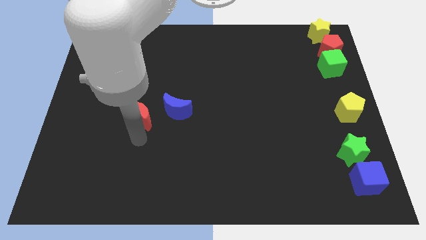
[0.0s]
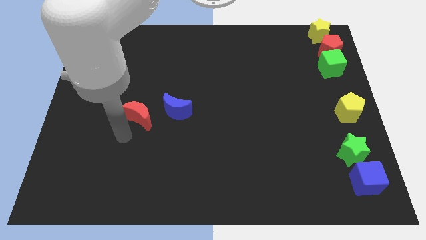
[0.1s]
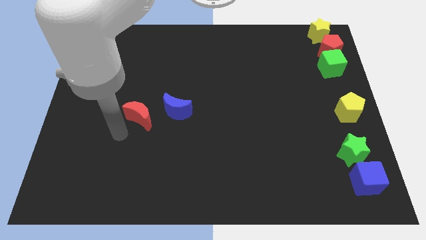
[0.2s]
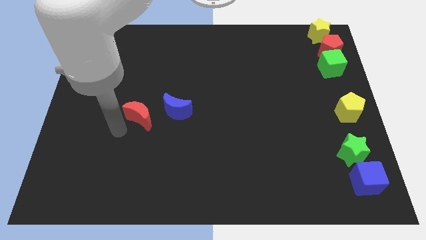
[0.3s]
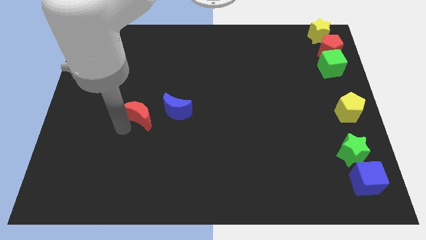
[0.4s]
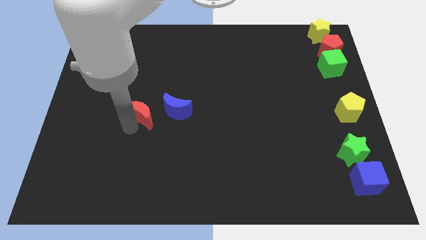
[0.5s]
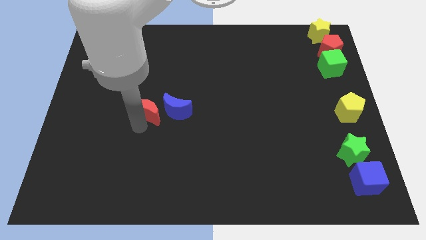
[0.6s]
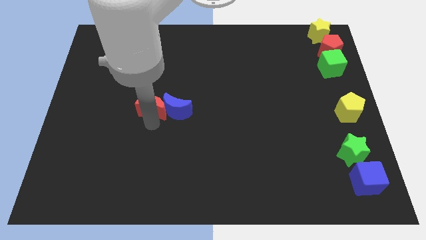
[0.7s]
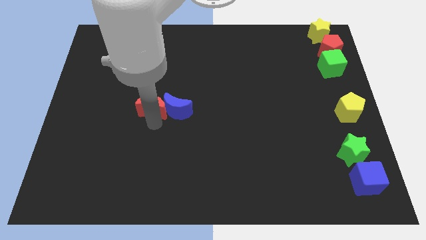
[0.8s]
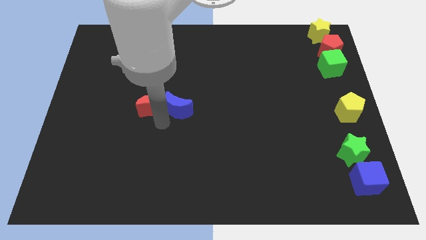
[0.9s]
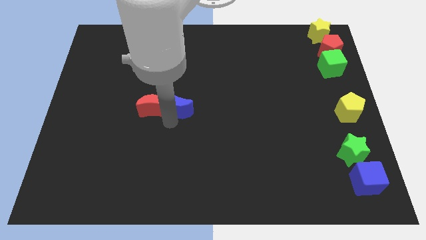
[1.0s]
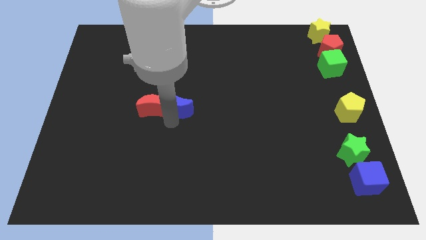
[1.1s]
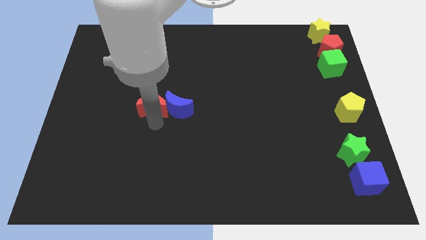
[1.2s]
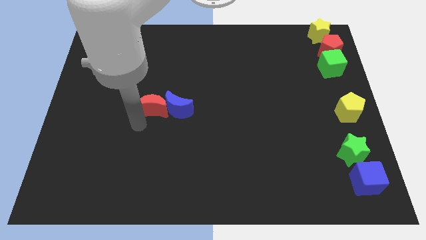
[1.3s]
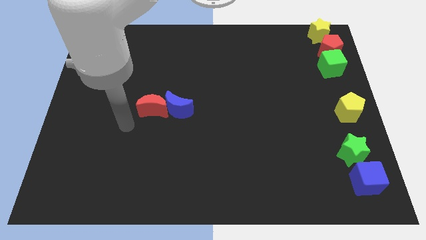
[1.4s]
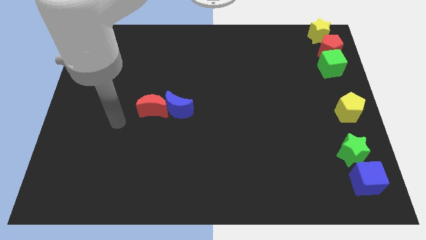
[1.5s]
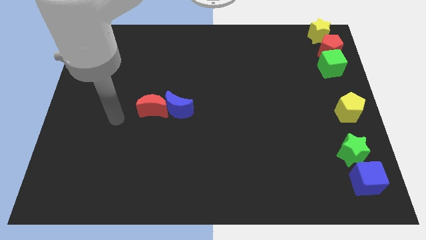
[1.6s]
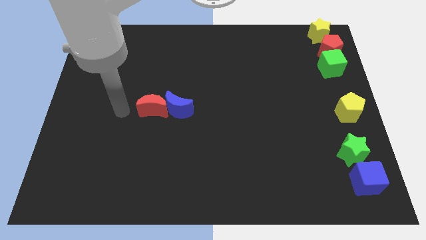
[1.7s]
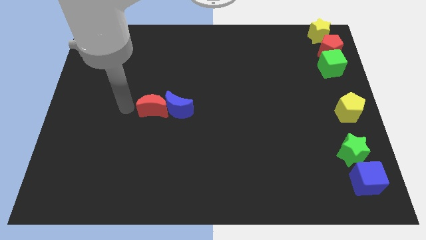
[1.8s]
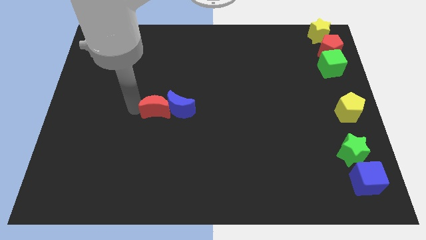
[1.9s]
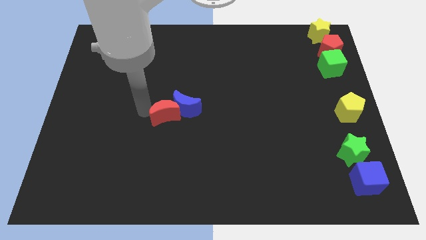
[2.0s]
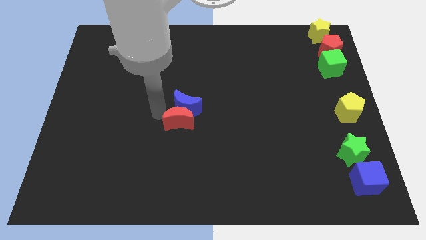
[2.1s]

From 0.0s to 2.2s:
push the red moon into the blue moon

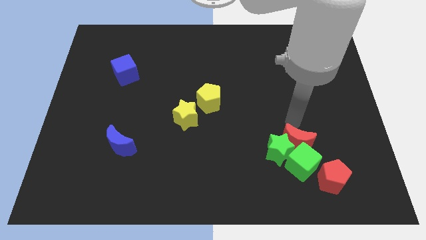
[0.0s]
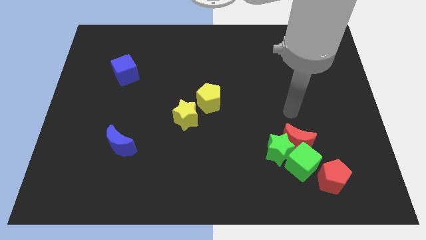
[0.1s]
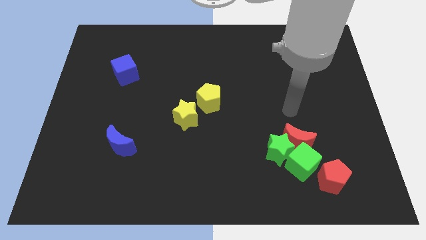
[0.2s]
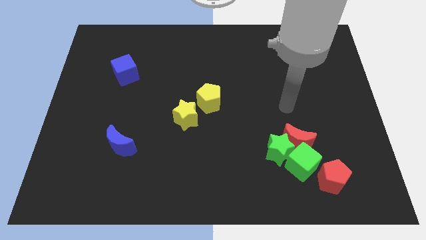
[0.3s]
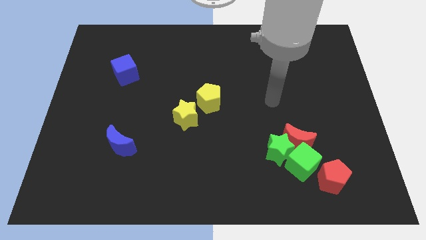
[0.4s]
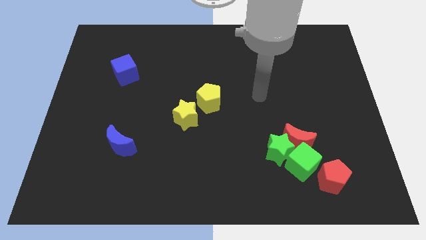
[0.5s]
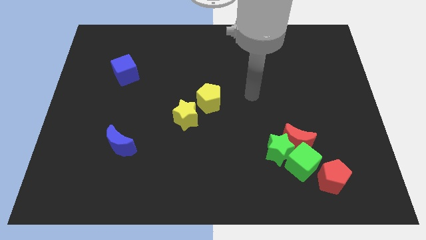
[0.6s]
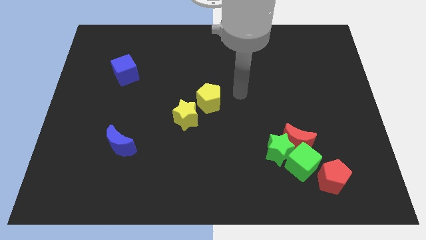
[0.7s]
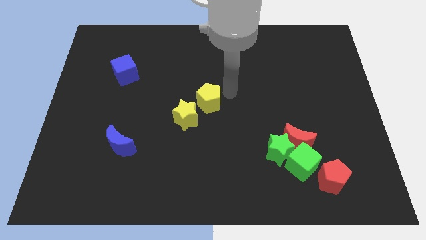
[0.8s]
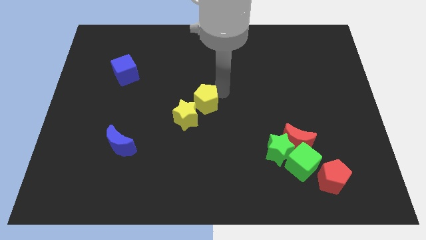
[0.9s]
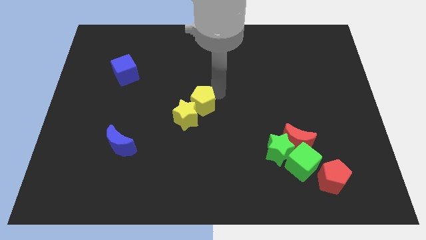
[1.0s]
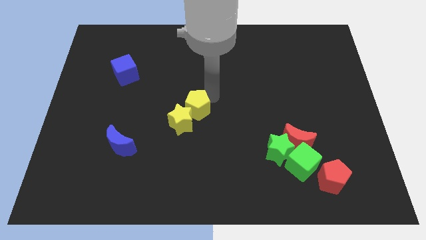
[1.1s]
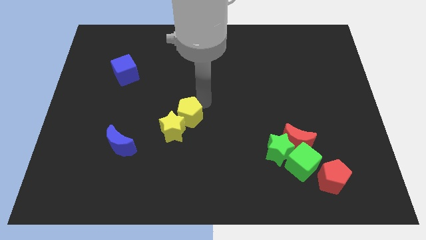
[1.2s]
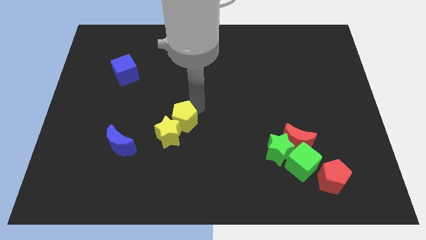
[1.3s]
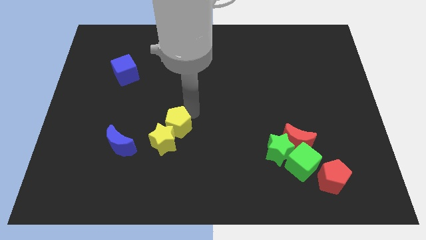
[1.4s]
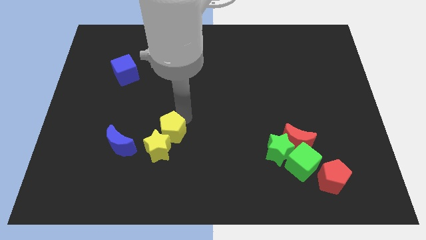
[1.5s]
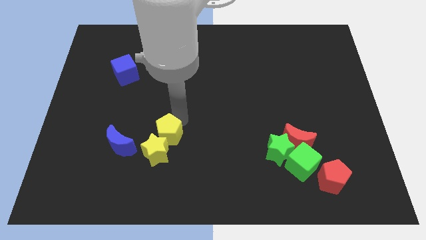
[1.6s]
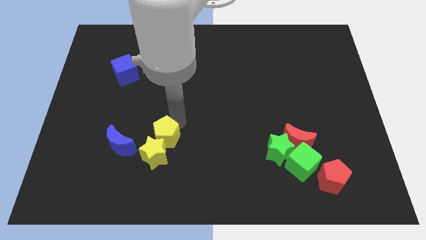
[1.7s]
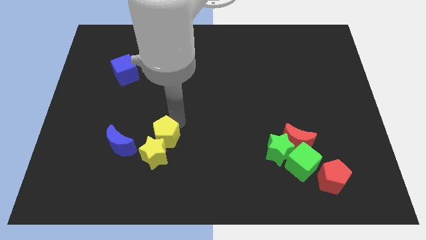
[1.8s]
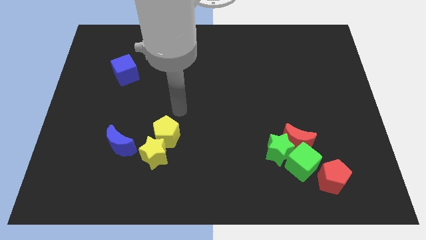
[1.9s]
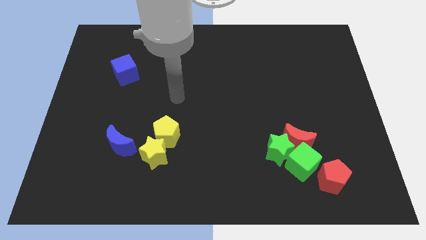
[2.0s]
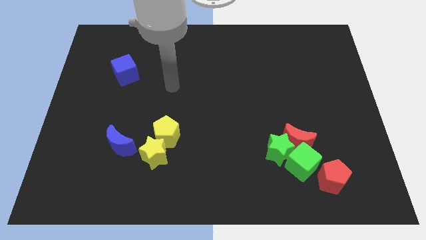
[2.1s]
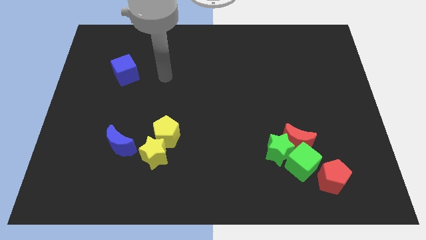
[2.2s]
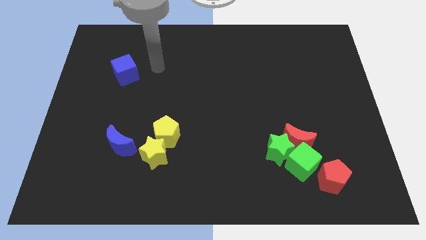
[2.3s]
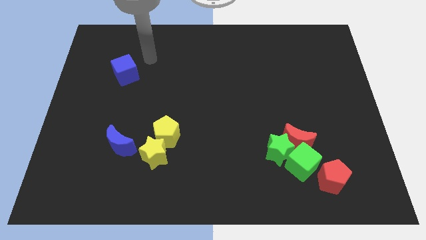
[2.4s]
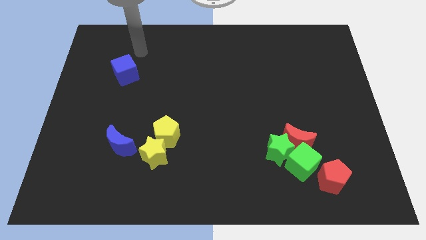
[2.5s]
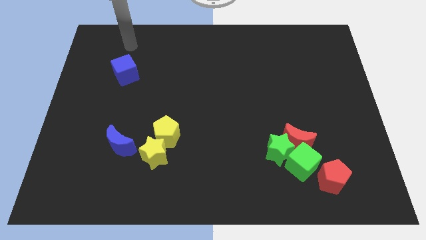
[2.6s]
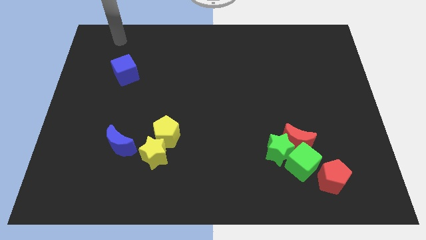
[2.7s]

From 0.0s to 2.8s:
push the yellow blocks slightly towards the blue crescent

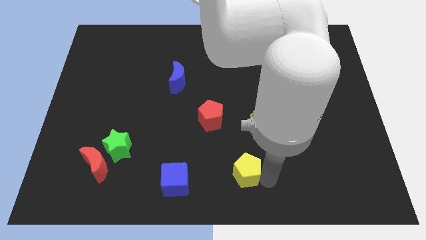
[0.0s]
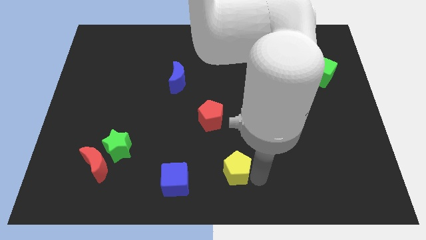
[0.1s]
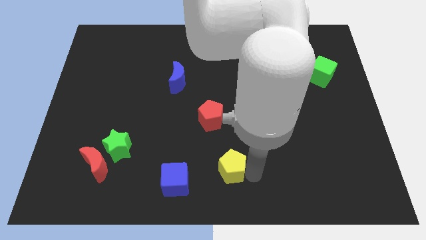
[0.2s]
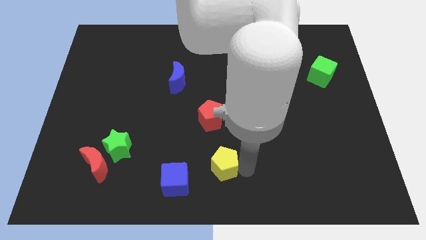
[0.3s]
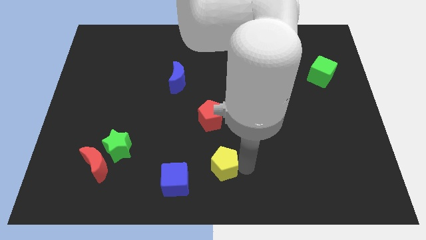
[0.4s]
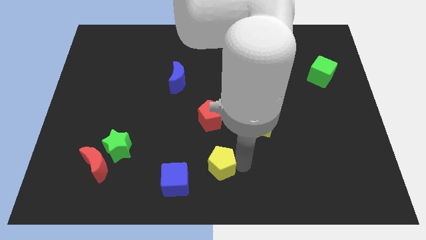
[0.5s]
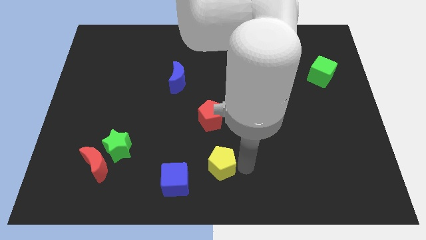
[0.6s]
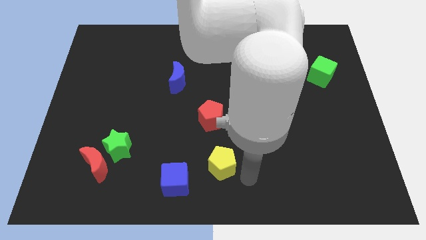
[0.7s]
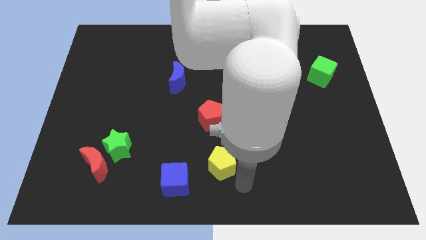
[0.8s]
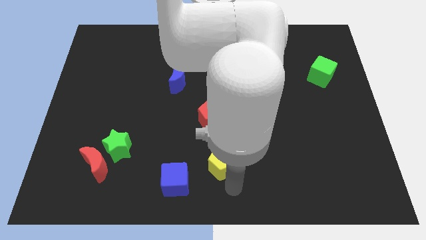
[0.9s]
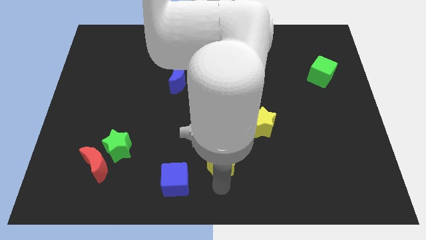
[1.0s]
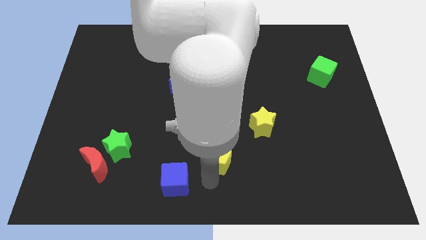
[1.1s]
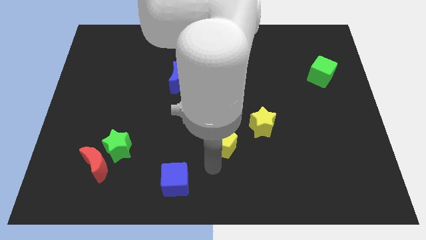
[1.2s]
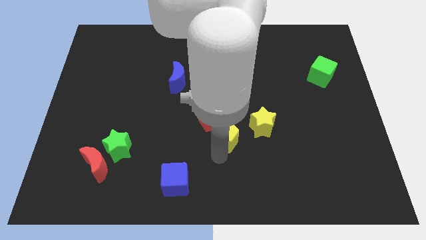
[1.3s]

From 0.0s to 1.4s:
move the yellow pentagon bottom right to the red pentagon

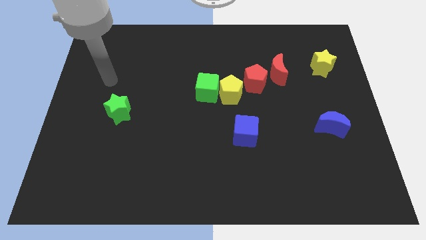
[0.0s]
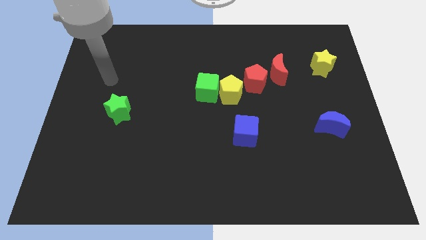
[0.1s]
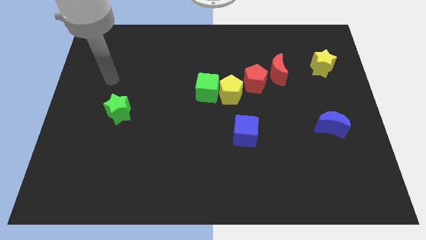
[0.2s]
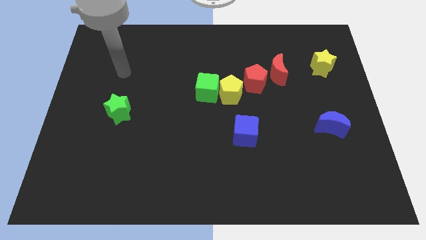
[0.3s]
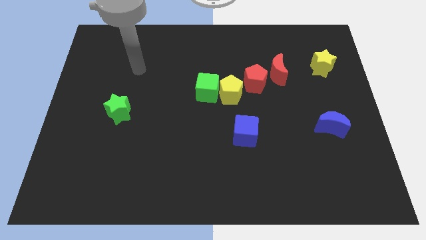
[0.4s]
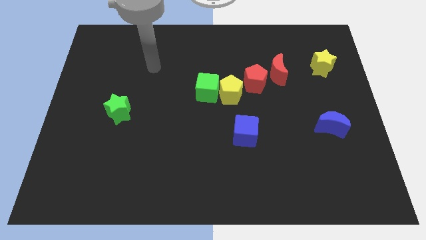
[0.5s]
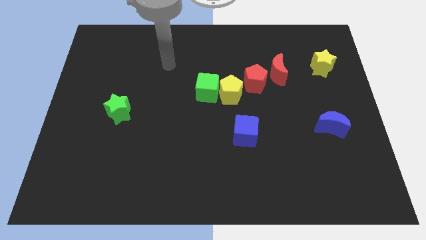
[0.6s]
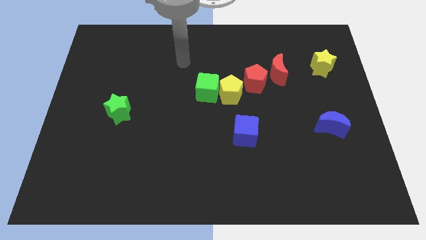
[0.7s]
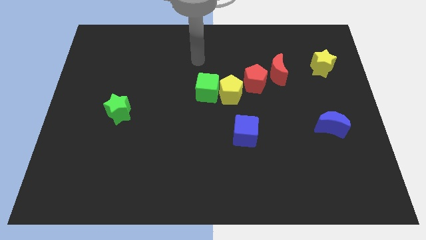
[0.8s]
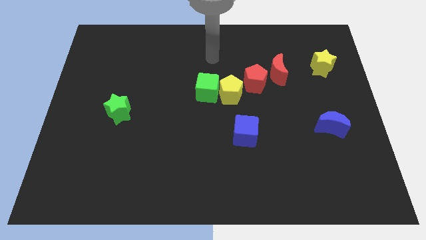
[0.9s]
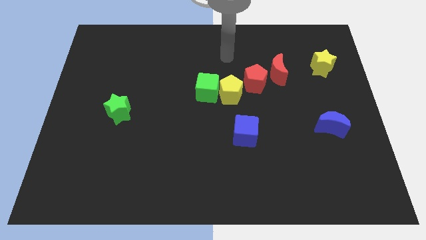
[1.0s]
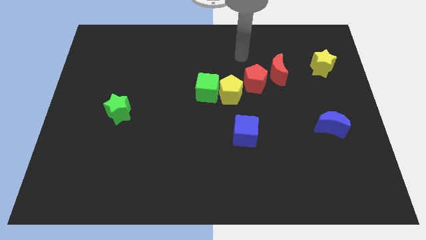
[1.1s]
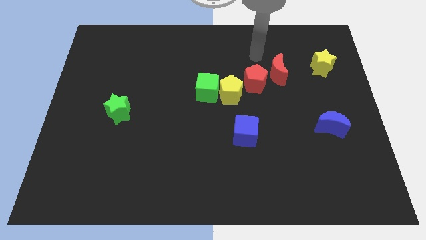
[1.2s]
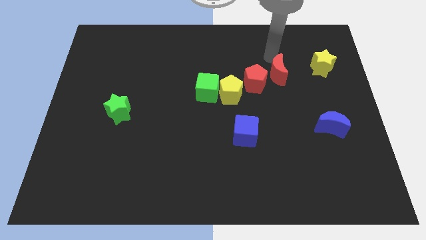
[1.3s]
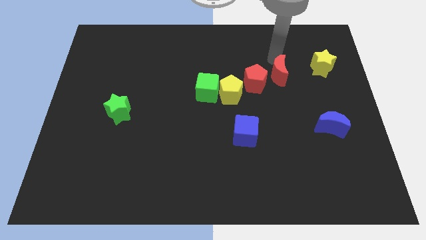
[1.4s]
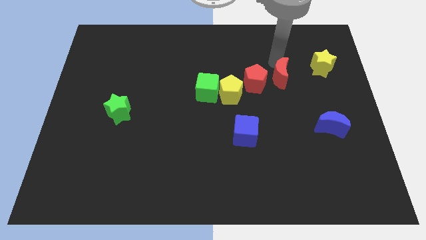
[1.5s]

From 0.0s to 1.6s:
tap the top side of the red crescent

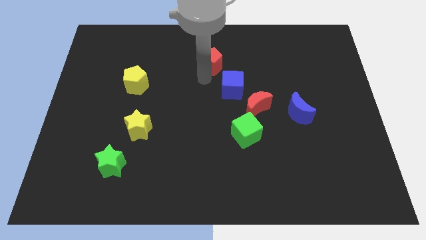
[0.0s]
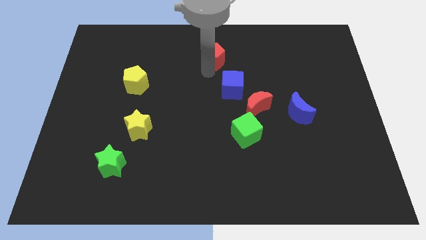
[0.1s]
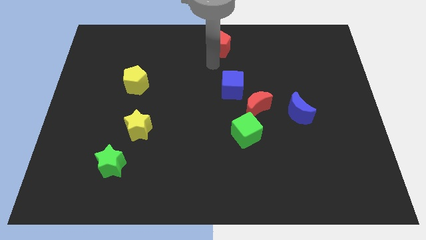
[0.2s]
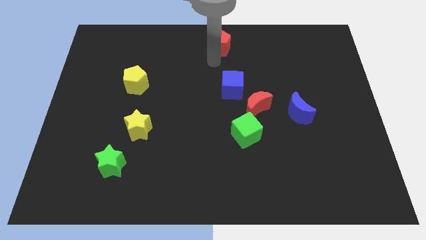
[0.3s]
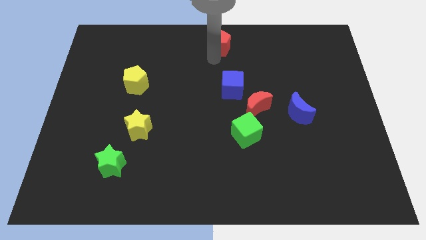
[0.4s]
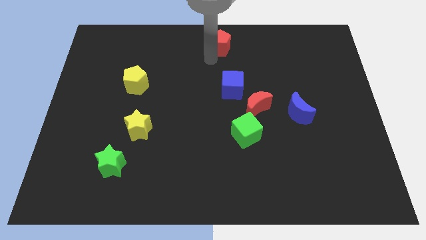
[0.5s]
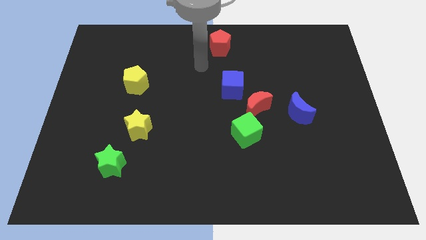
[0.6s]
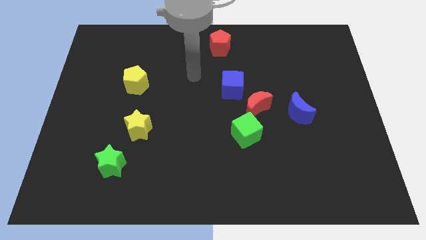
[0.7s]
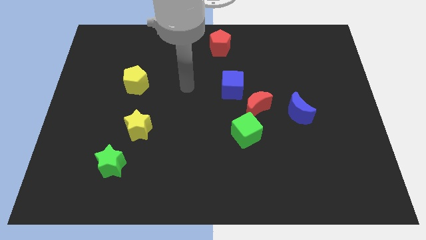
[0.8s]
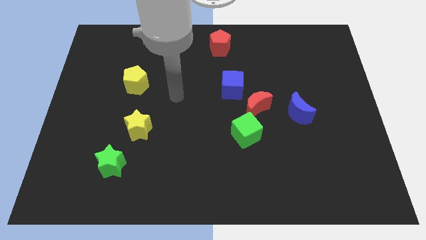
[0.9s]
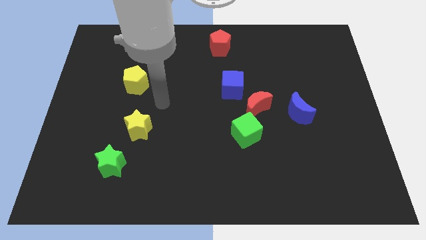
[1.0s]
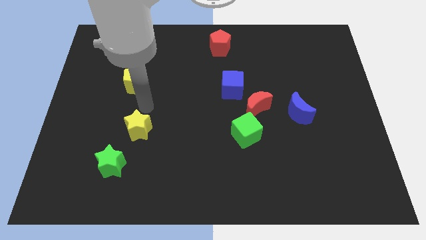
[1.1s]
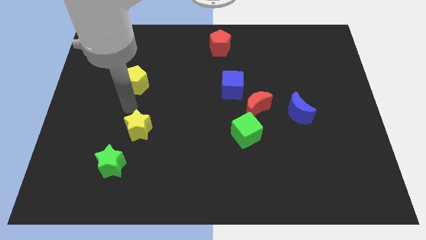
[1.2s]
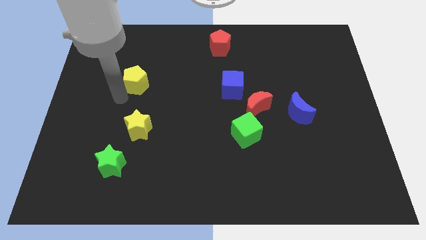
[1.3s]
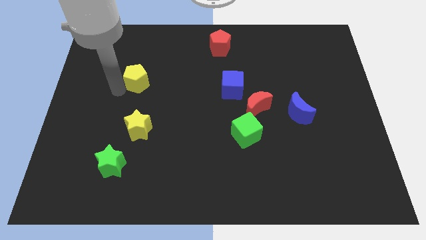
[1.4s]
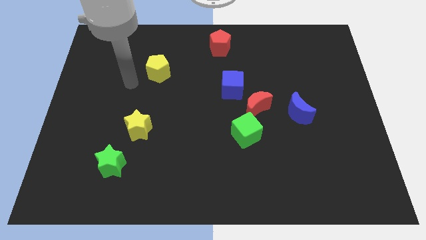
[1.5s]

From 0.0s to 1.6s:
move the red pentagon to the top center of the board
